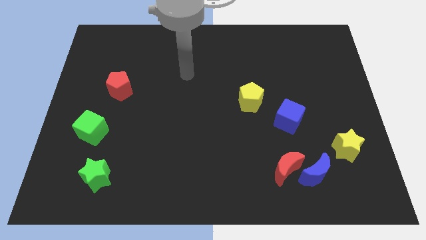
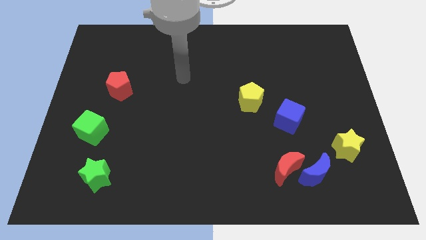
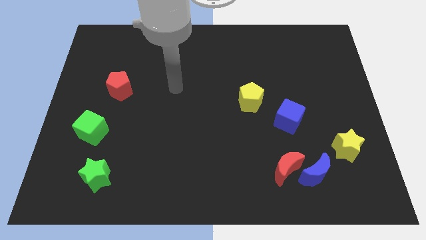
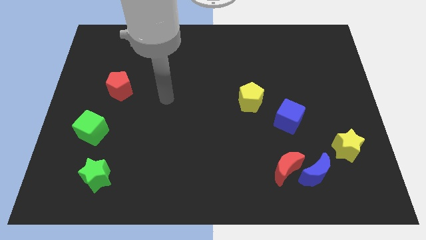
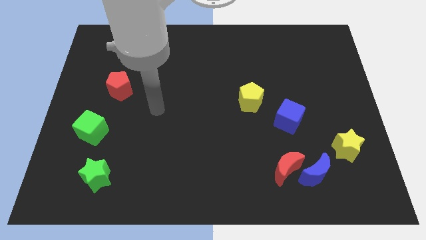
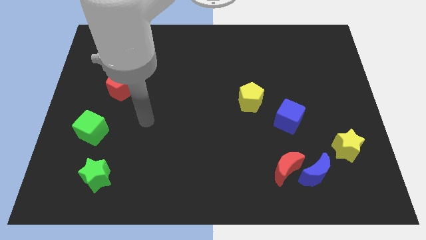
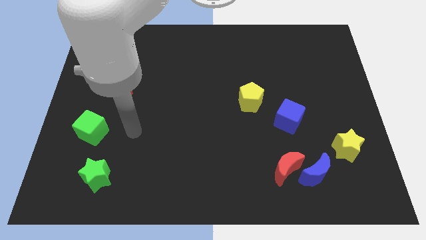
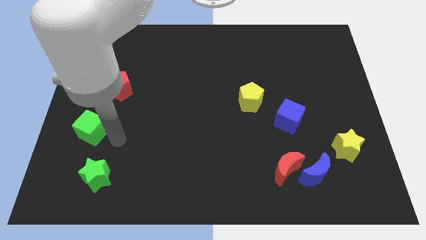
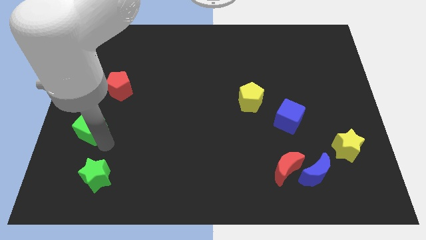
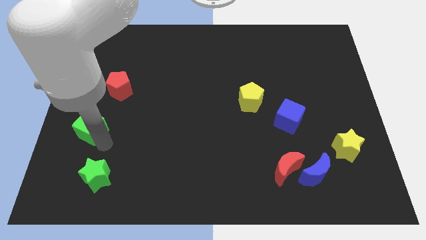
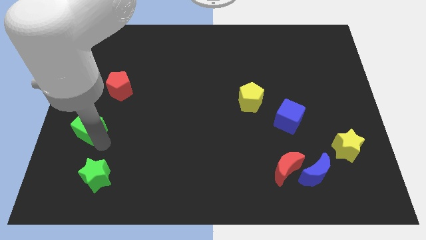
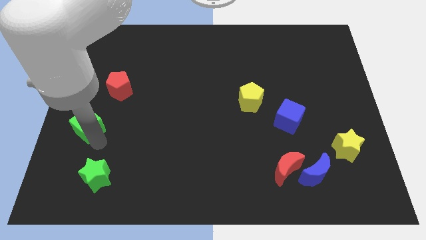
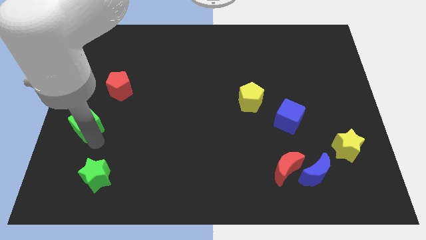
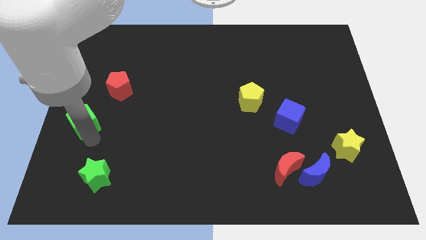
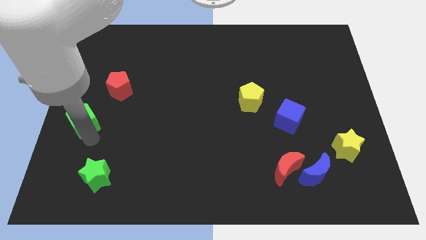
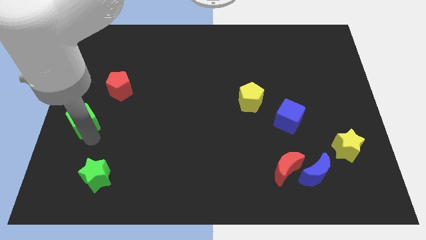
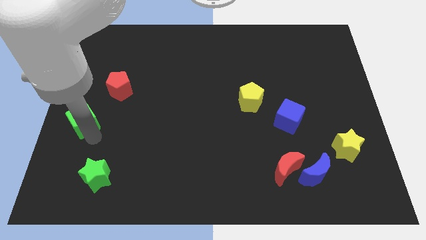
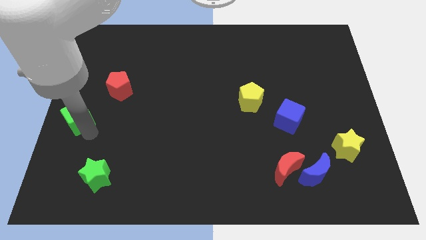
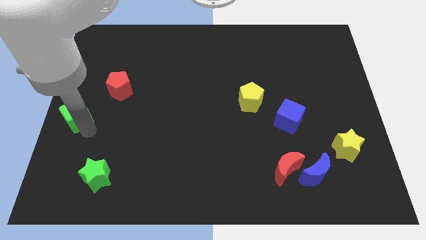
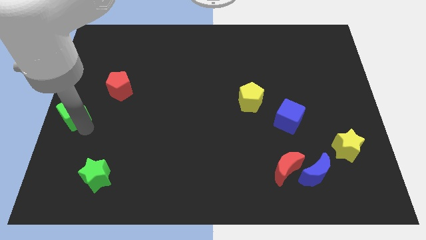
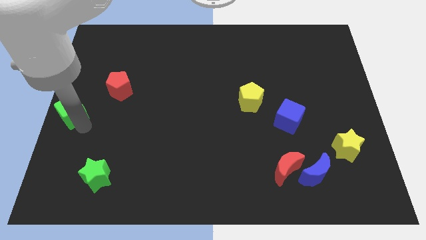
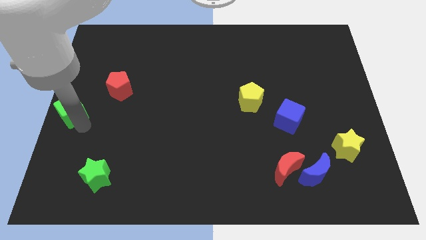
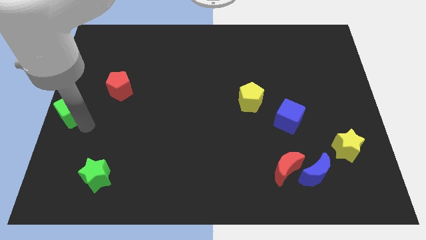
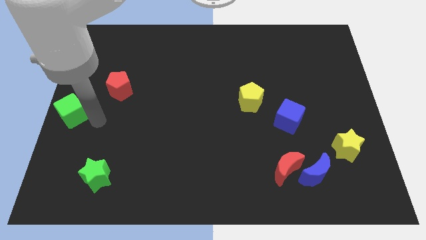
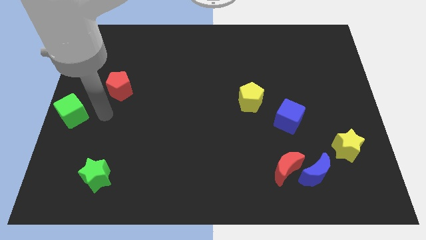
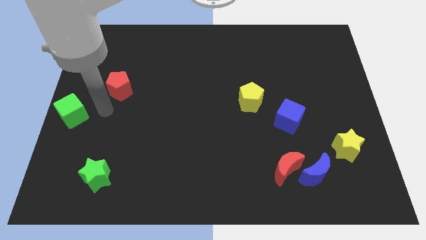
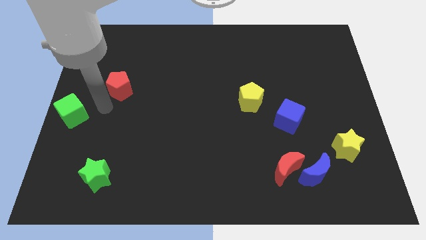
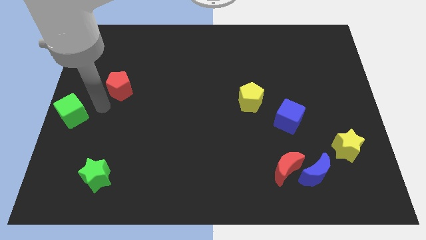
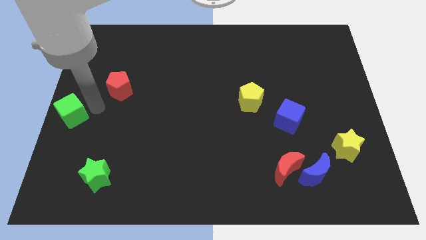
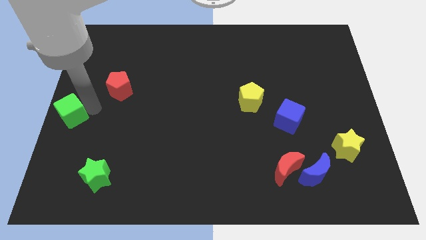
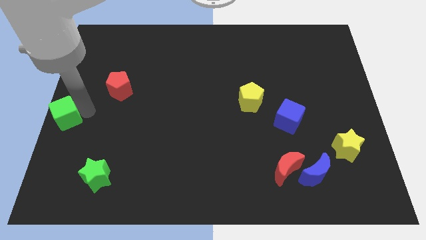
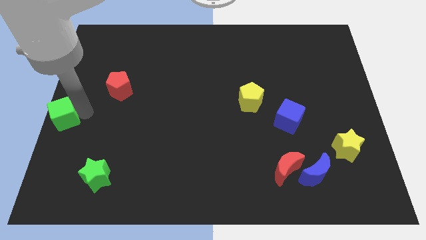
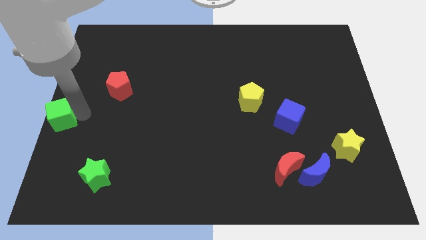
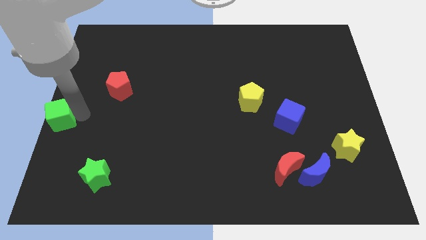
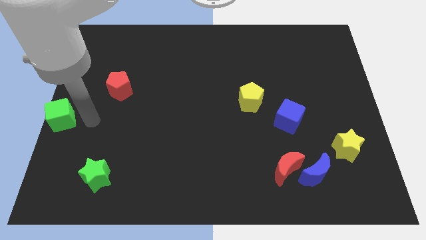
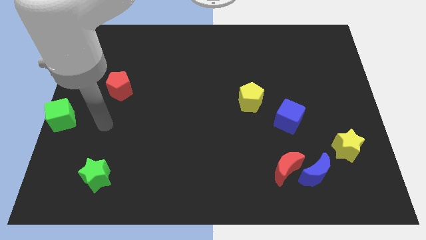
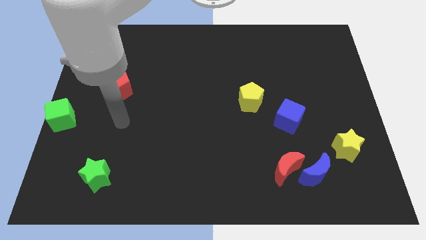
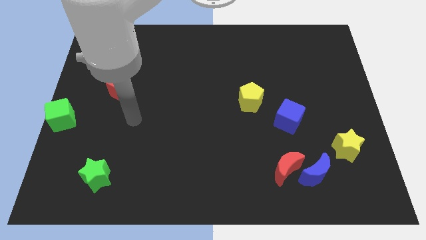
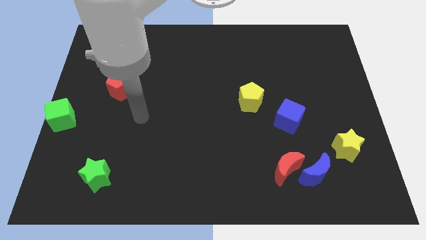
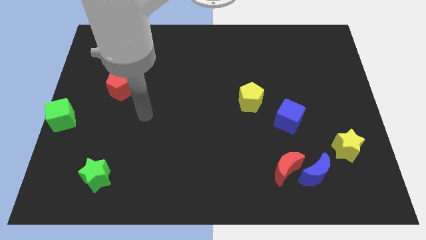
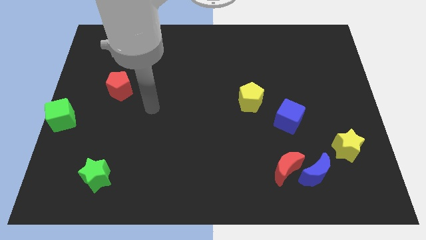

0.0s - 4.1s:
place green cube to the left center of the board

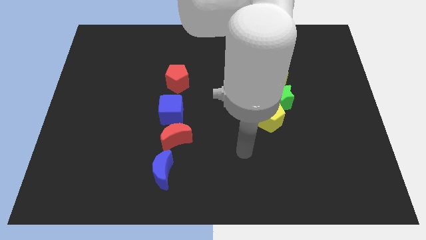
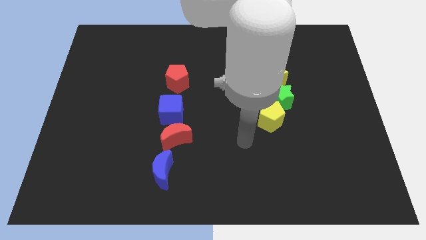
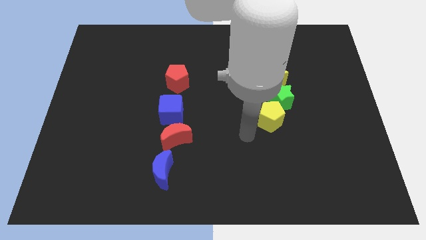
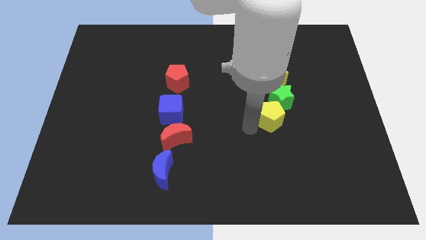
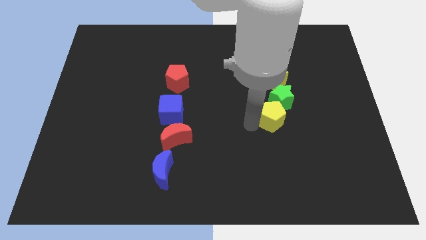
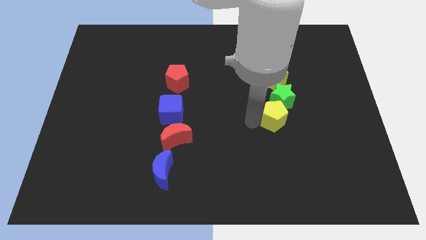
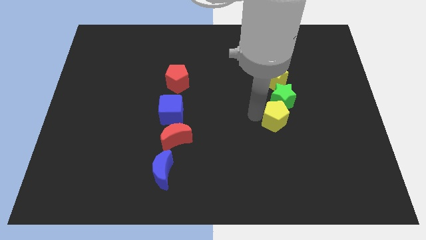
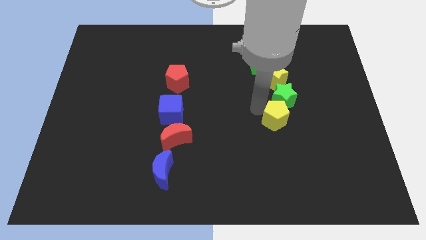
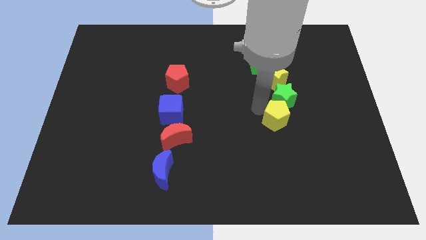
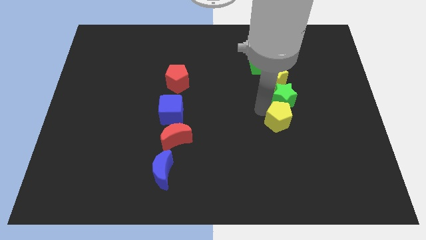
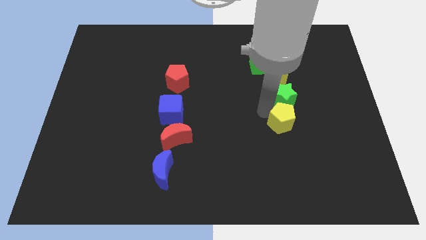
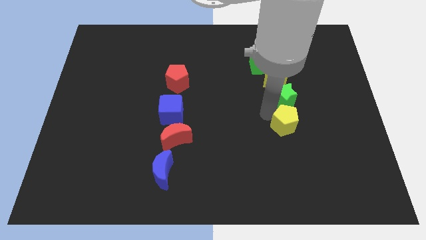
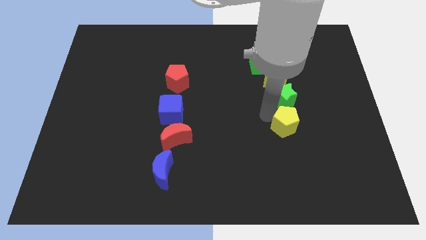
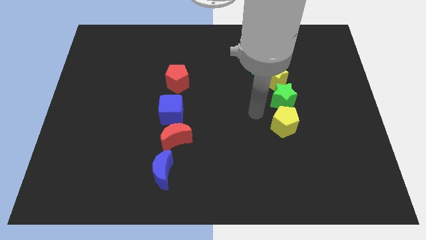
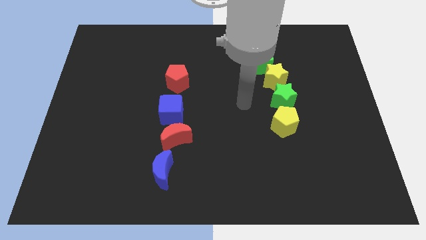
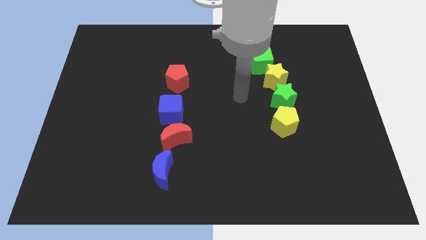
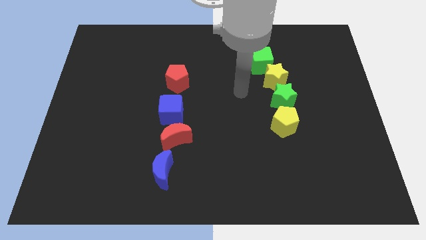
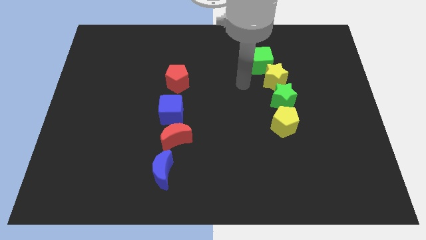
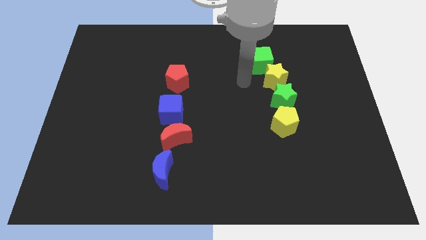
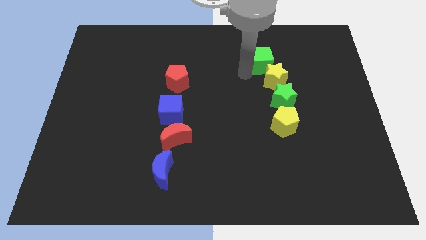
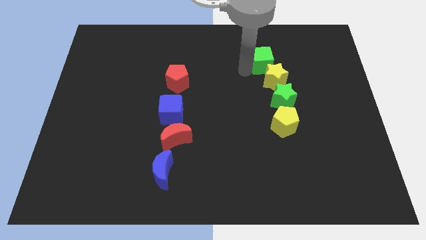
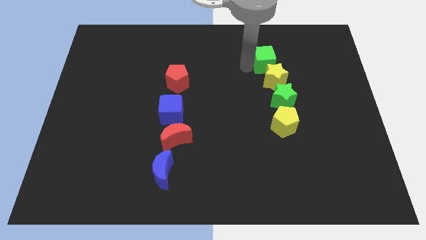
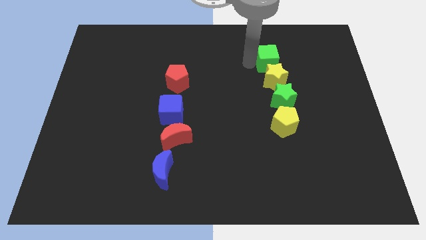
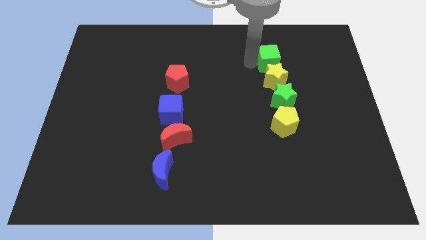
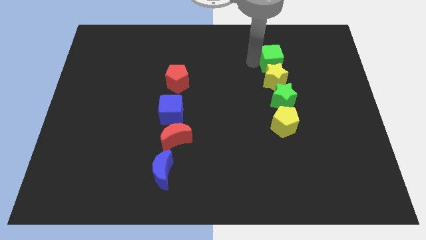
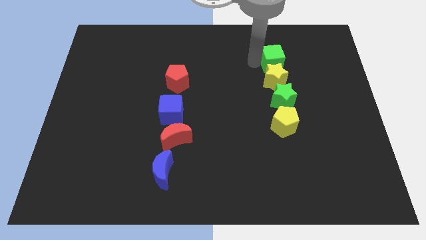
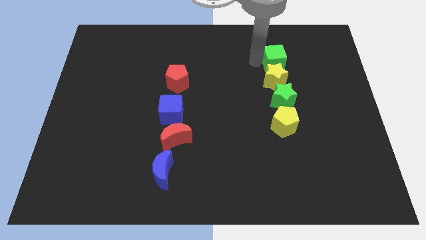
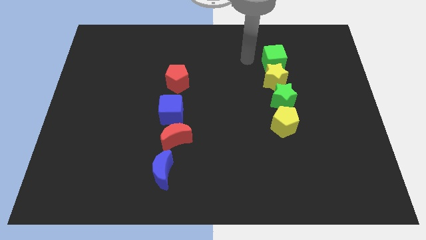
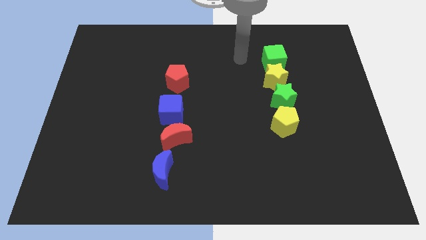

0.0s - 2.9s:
push the yellow pentagon and green cube to the right to form a vertical line

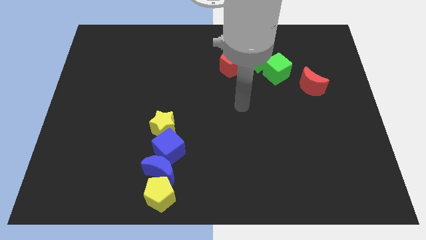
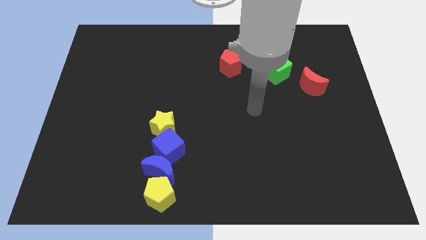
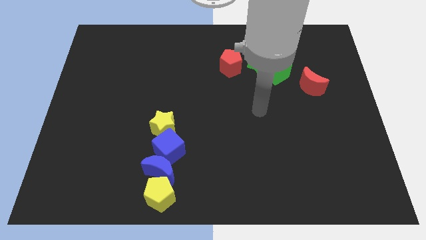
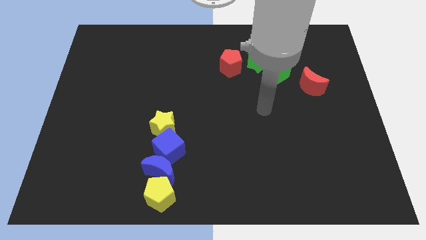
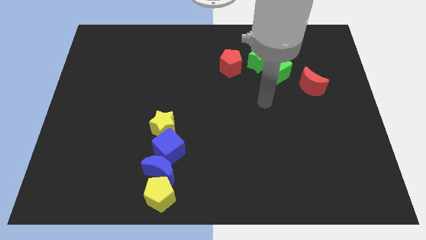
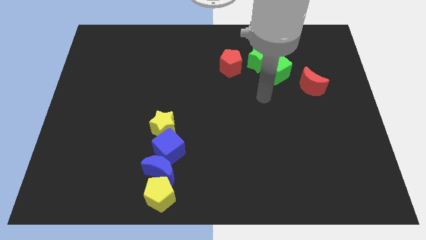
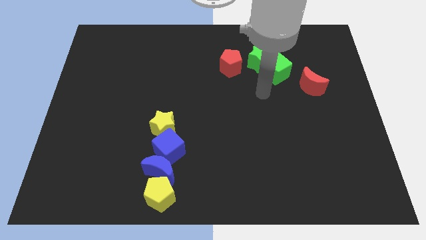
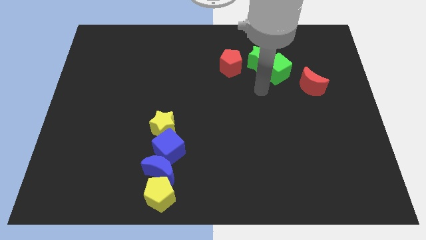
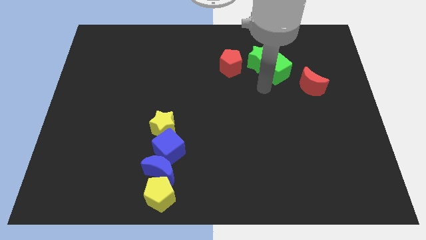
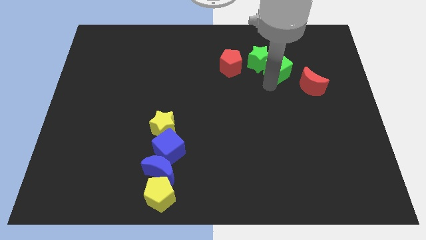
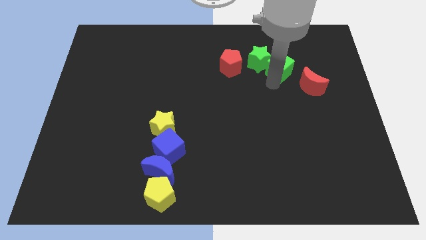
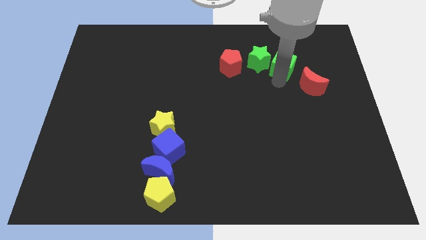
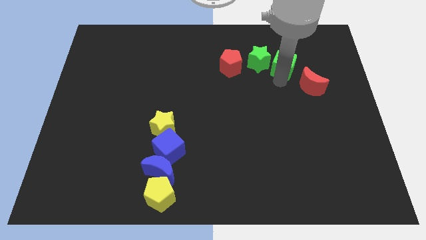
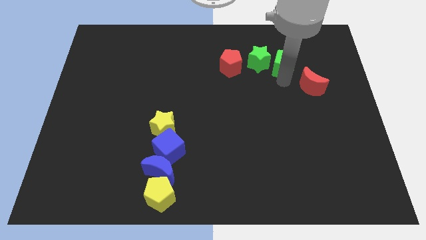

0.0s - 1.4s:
adjust the green cube in between the green star and red crescent

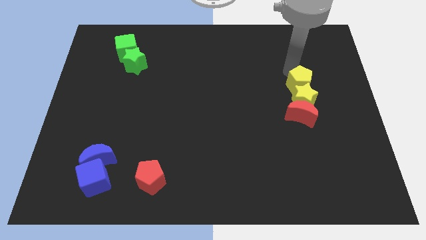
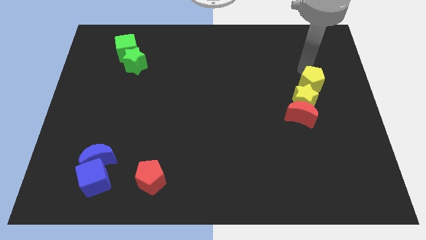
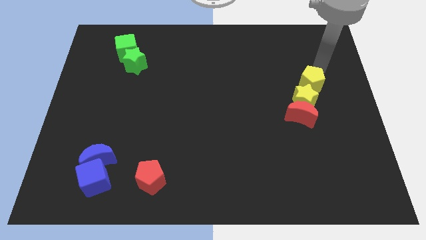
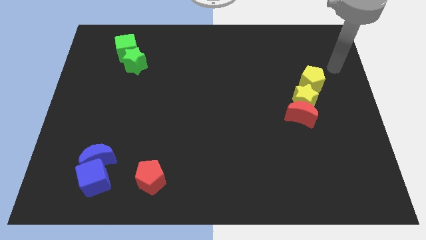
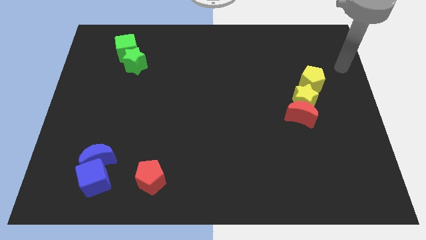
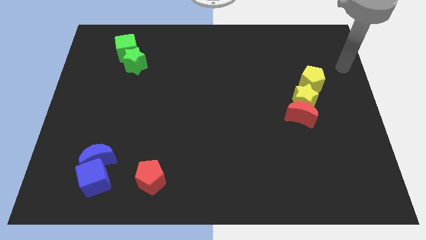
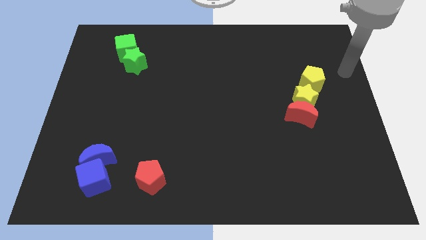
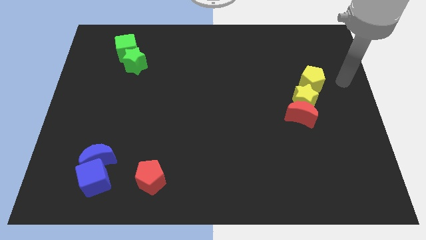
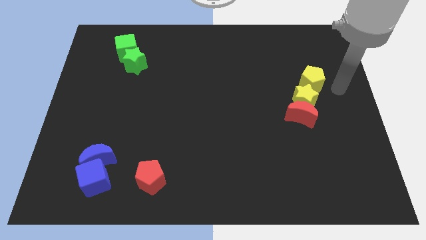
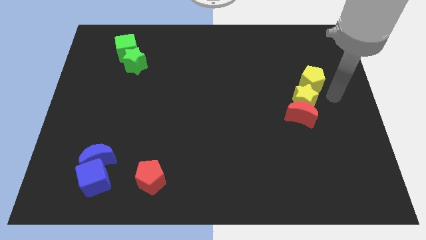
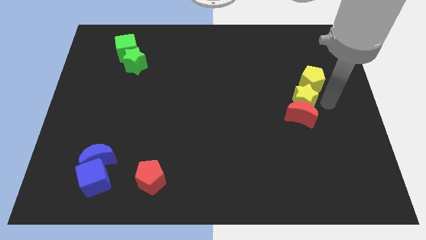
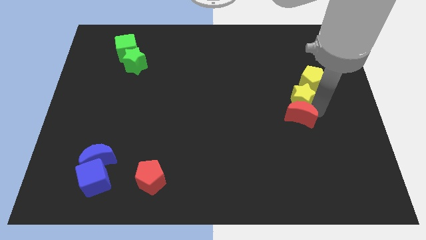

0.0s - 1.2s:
place your hand to the right of the yellow star
